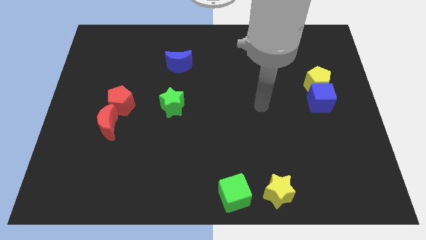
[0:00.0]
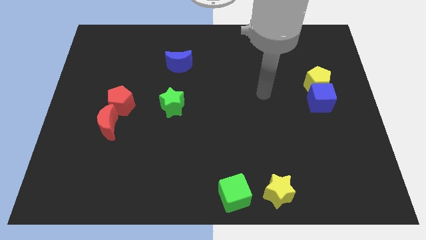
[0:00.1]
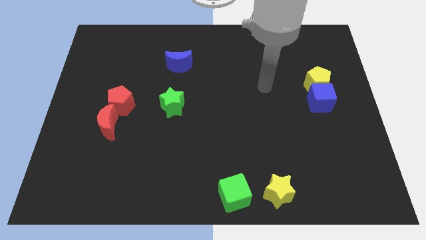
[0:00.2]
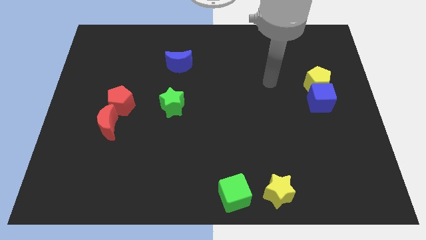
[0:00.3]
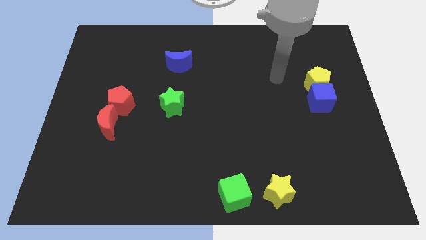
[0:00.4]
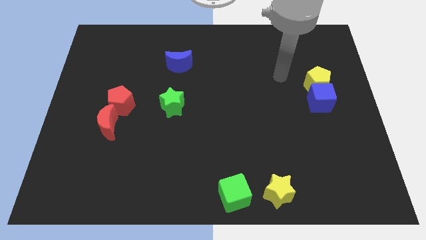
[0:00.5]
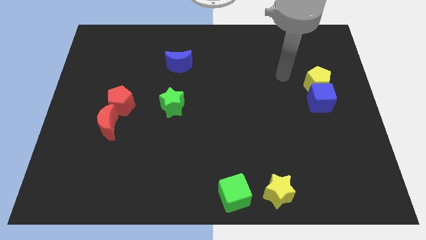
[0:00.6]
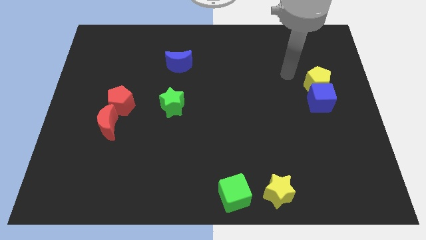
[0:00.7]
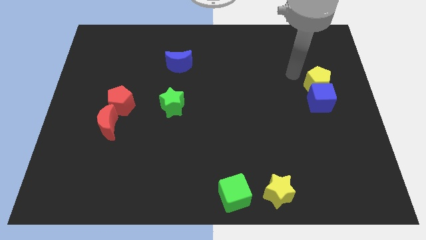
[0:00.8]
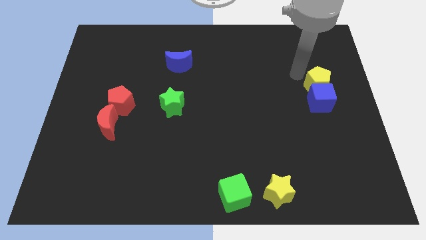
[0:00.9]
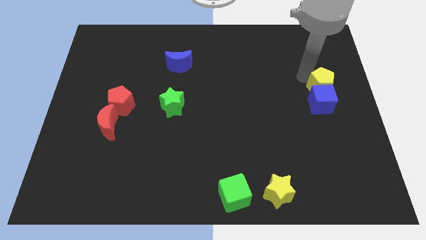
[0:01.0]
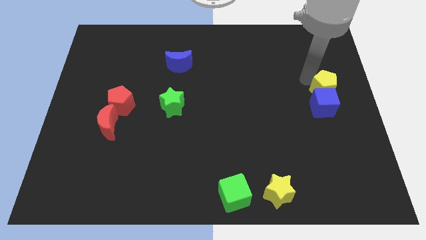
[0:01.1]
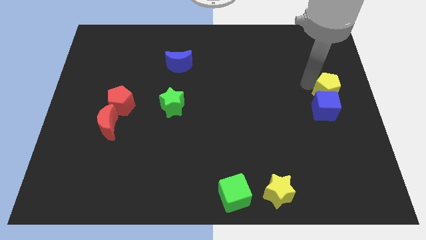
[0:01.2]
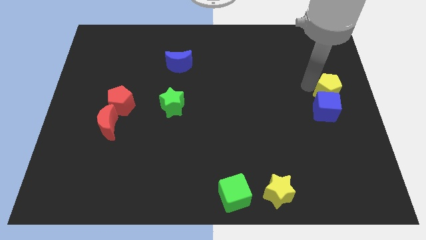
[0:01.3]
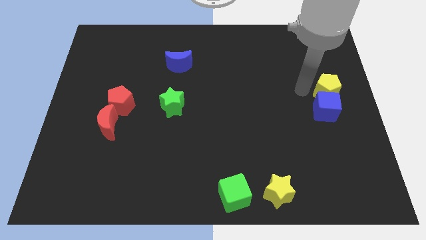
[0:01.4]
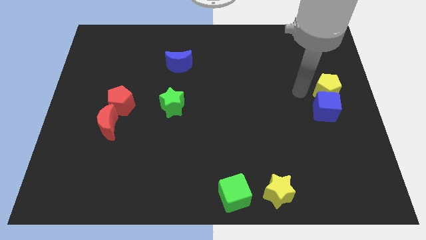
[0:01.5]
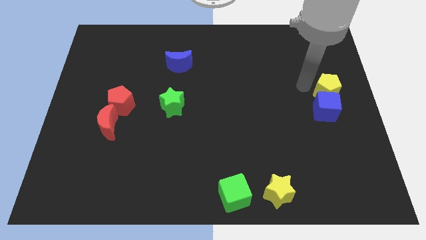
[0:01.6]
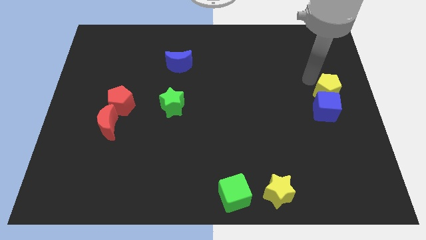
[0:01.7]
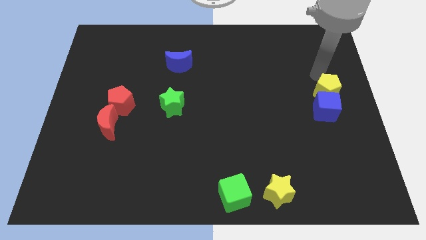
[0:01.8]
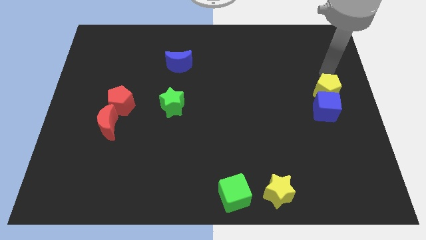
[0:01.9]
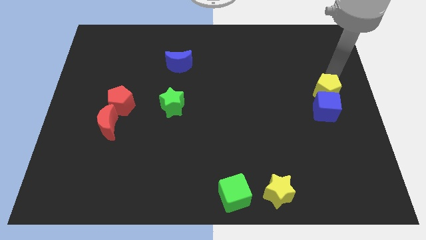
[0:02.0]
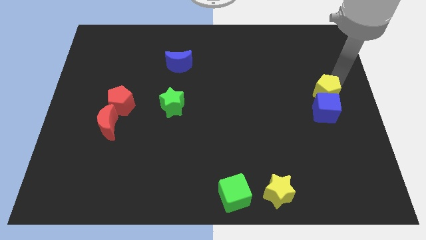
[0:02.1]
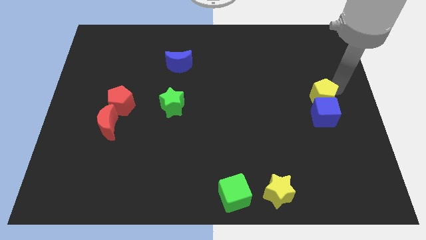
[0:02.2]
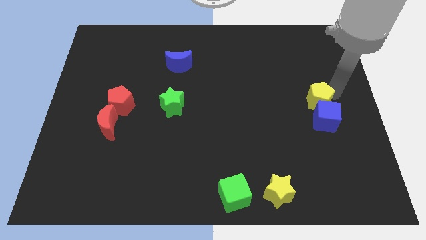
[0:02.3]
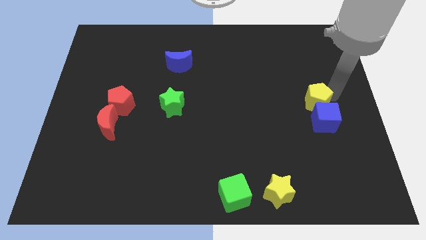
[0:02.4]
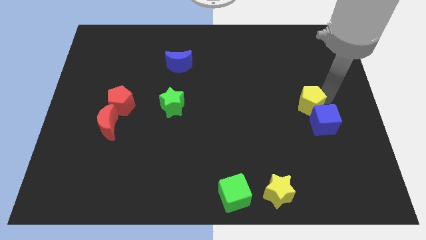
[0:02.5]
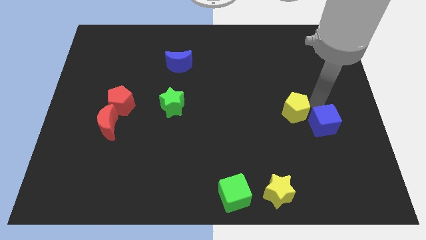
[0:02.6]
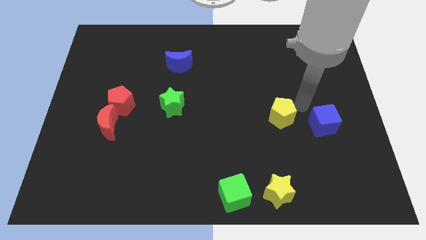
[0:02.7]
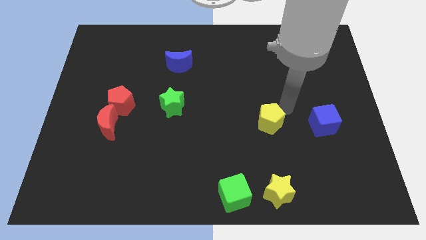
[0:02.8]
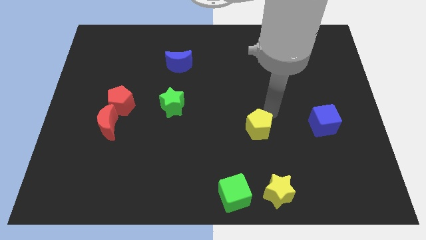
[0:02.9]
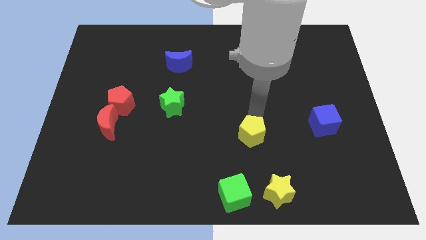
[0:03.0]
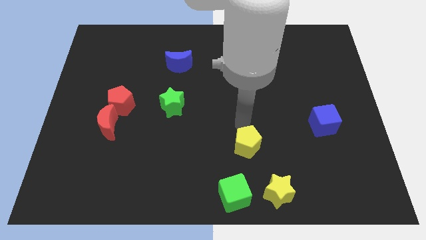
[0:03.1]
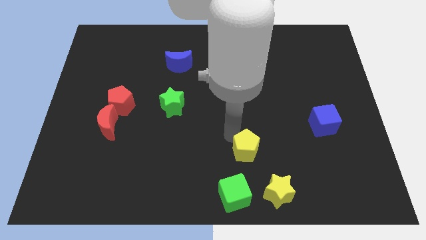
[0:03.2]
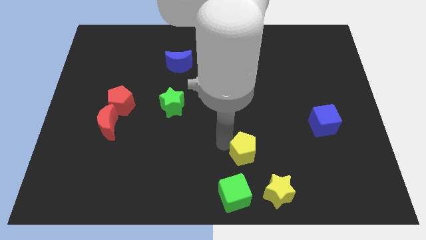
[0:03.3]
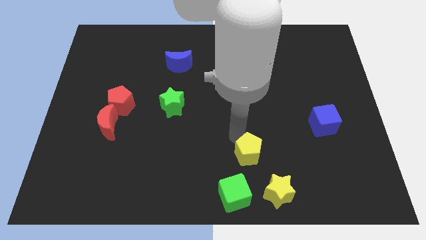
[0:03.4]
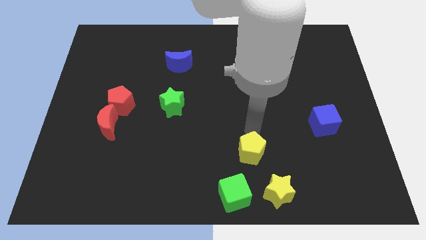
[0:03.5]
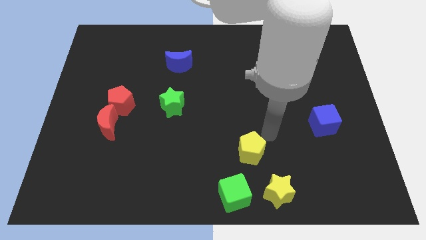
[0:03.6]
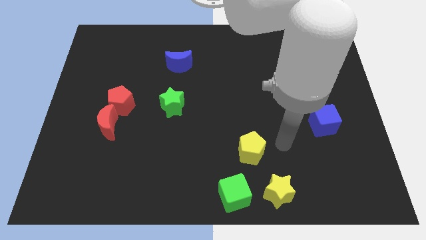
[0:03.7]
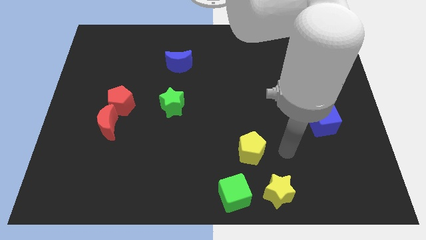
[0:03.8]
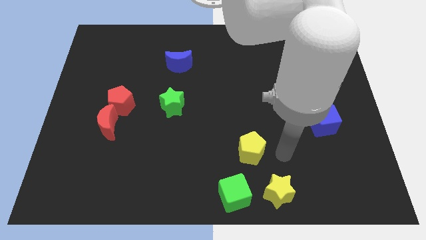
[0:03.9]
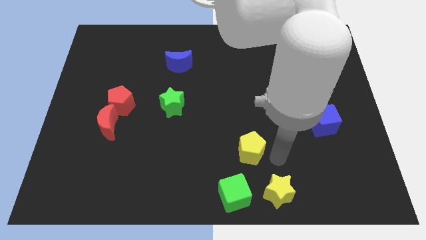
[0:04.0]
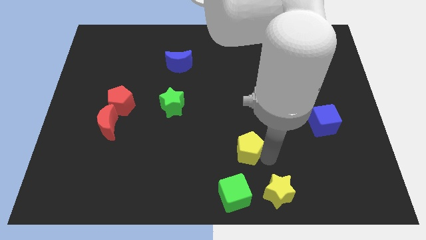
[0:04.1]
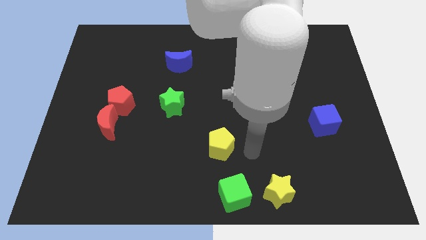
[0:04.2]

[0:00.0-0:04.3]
move the yellow pentagon towards the green cube and yellow star

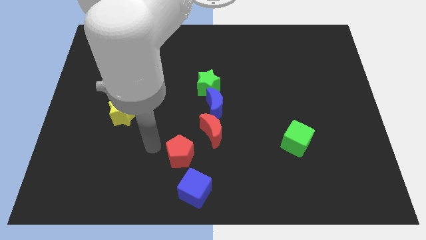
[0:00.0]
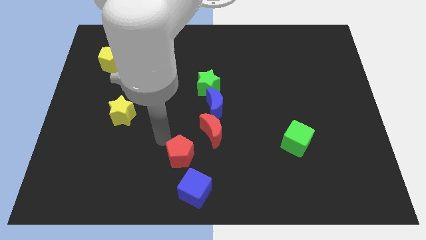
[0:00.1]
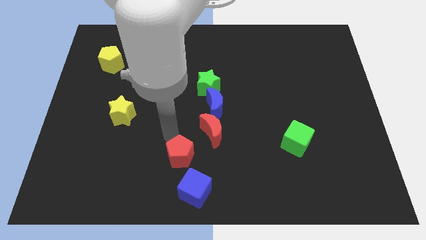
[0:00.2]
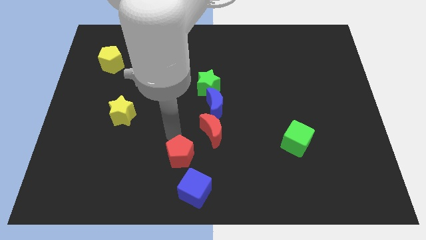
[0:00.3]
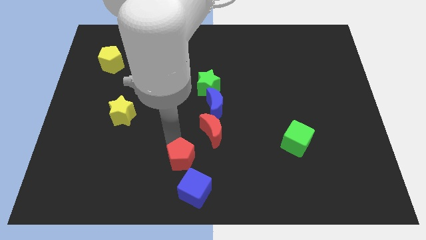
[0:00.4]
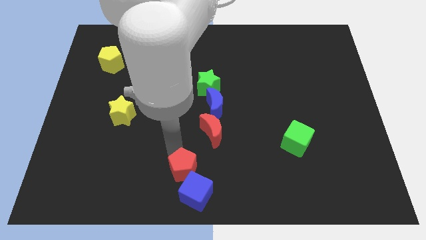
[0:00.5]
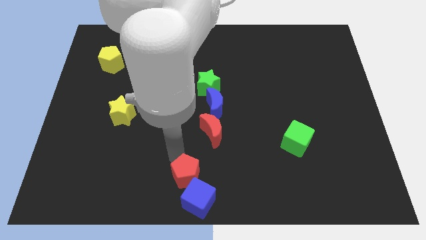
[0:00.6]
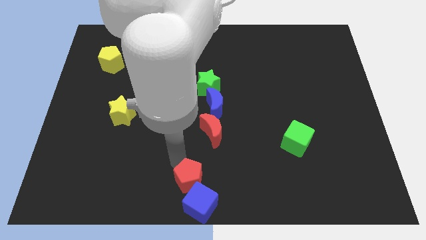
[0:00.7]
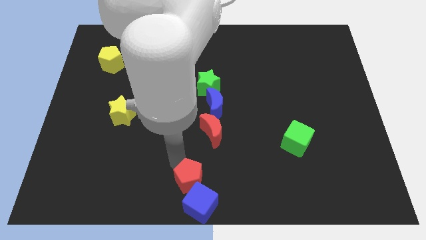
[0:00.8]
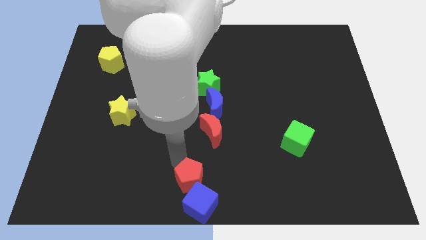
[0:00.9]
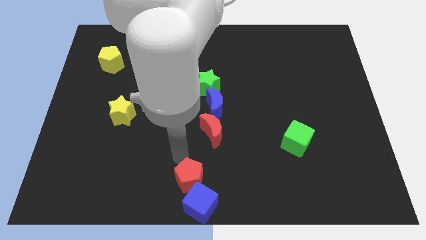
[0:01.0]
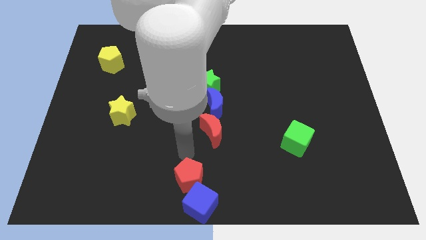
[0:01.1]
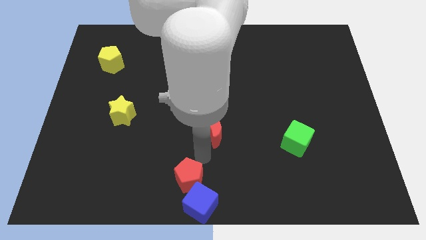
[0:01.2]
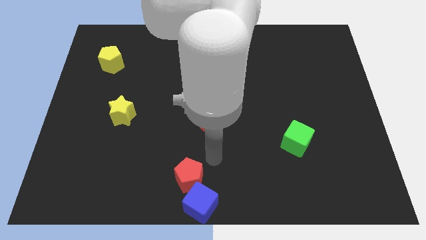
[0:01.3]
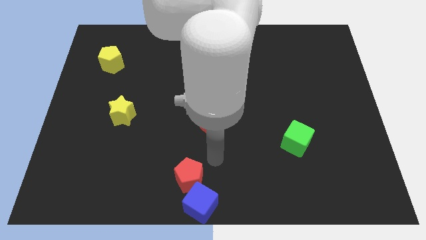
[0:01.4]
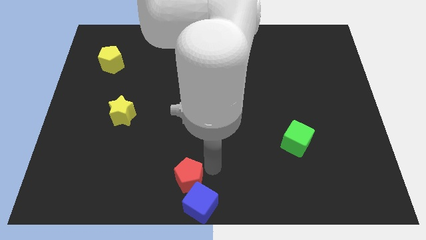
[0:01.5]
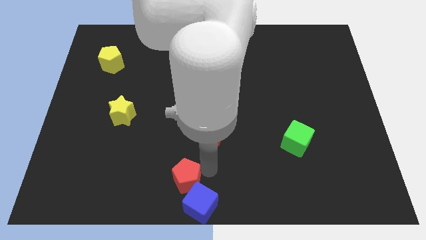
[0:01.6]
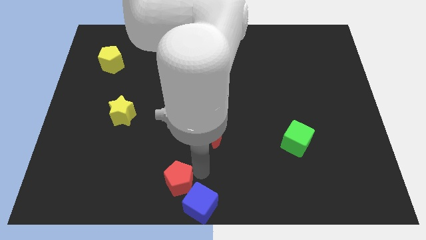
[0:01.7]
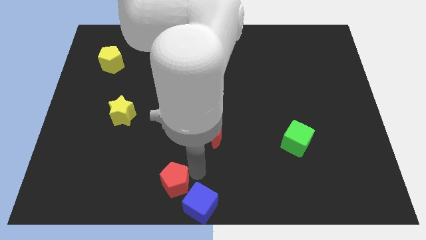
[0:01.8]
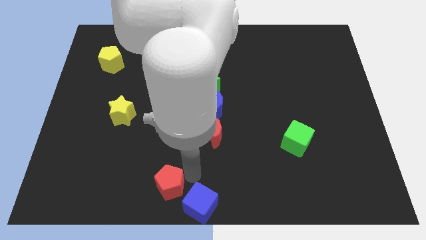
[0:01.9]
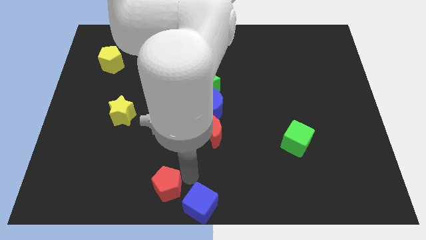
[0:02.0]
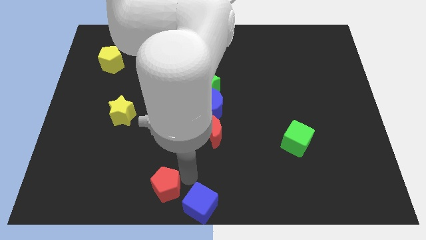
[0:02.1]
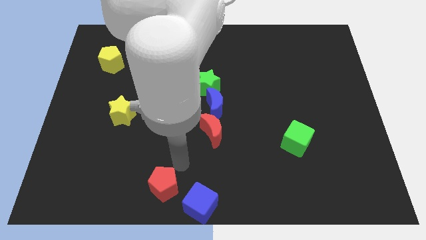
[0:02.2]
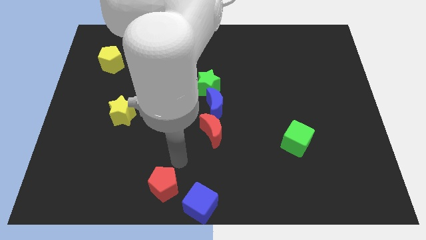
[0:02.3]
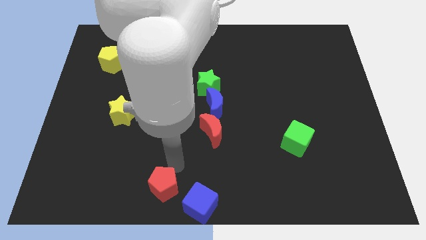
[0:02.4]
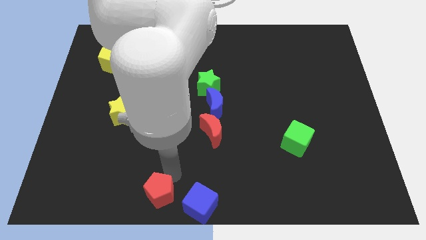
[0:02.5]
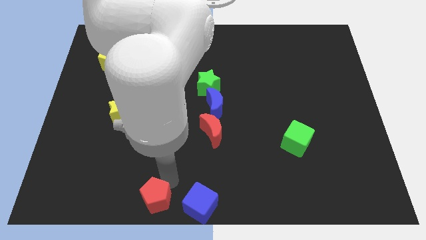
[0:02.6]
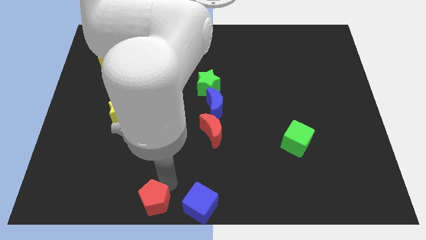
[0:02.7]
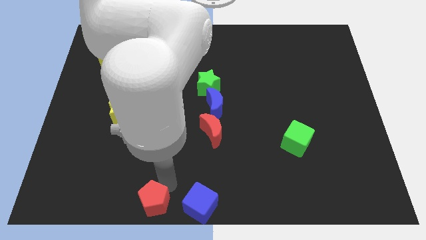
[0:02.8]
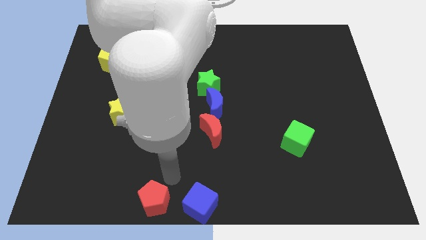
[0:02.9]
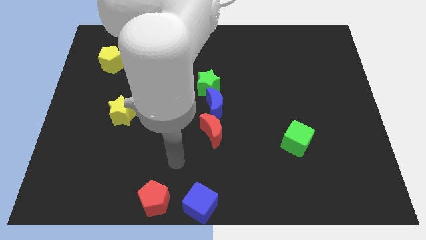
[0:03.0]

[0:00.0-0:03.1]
move the red pentagon left to the blue cube

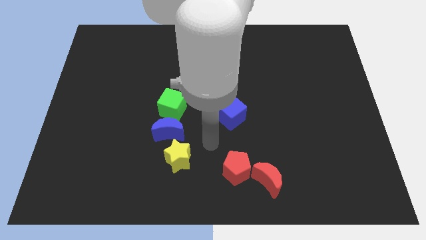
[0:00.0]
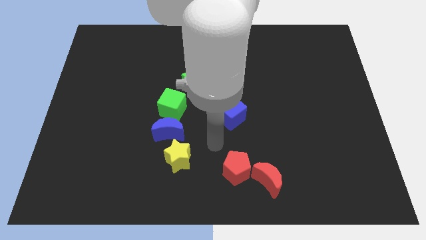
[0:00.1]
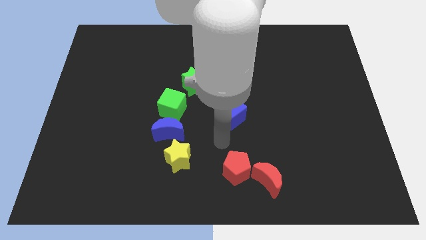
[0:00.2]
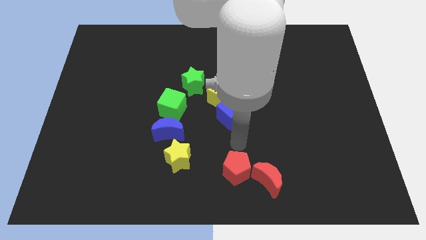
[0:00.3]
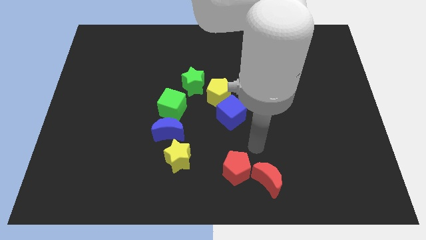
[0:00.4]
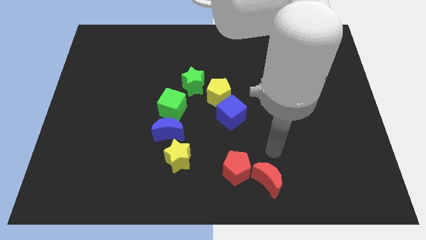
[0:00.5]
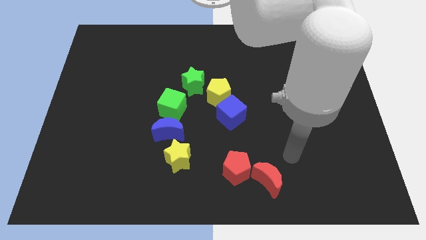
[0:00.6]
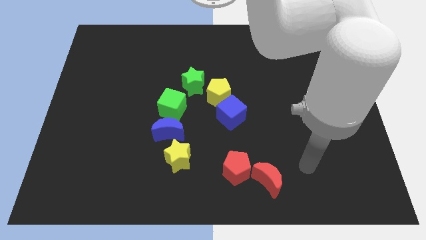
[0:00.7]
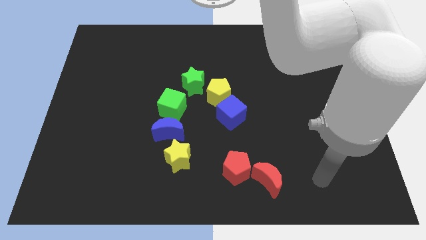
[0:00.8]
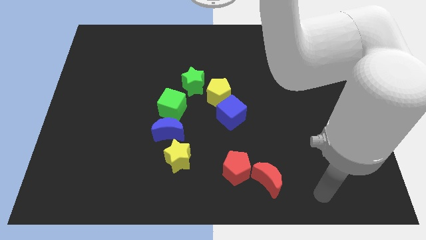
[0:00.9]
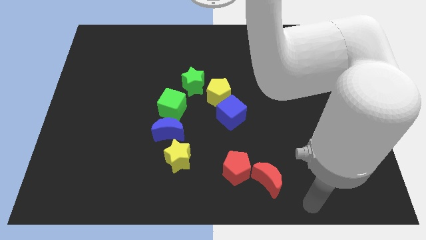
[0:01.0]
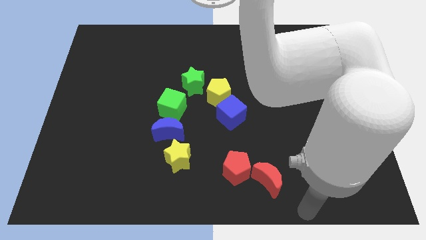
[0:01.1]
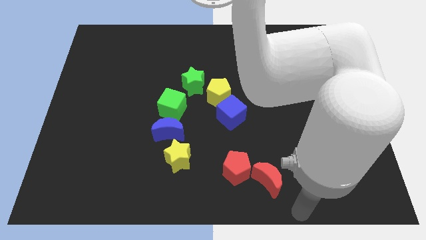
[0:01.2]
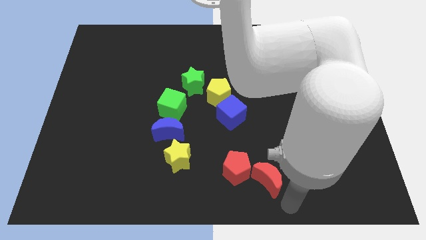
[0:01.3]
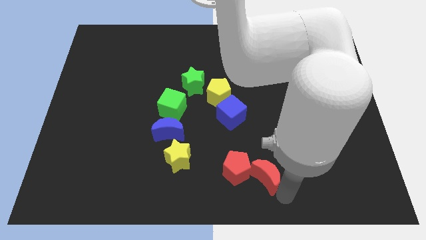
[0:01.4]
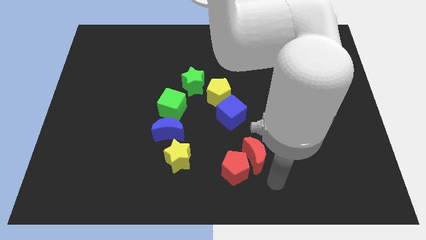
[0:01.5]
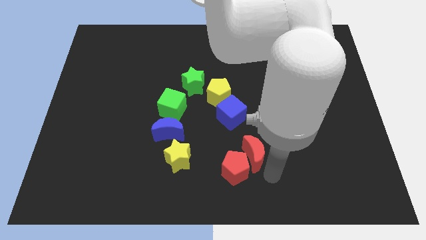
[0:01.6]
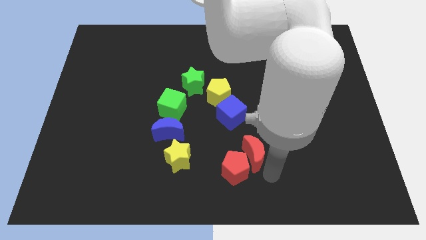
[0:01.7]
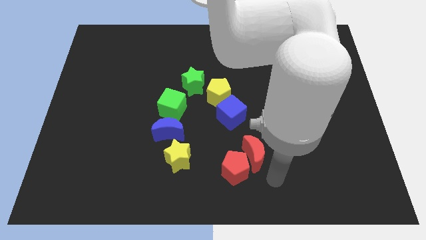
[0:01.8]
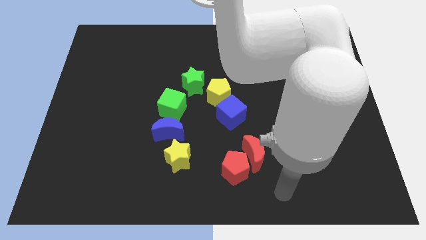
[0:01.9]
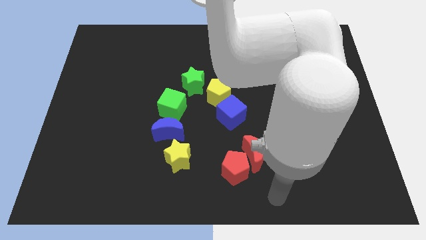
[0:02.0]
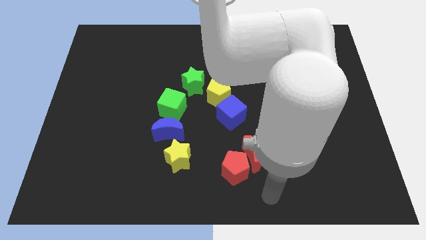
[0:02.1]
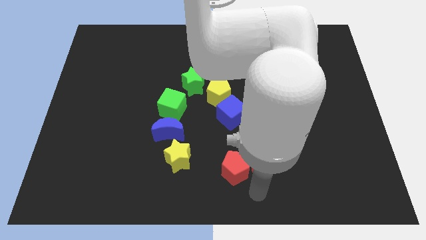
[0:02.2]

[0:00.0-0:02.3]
move the red moon slightly up
